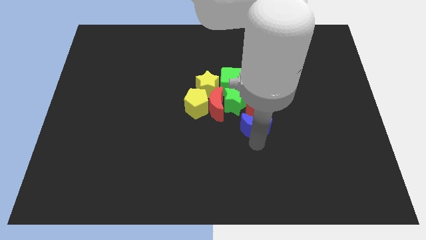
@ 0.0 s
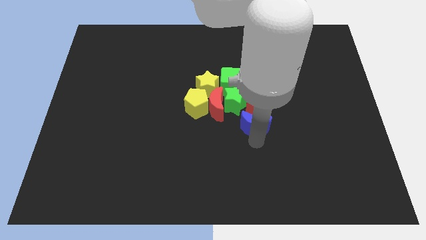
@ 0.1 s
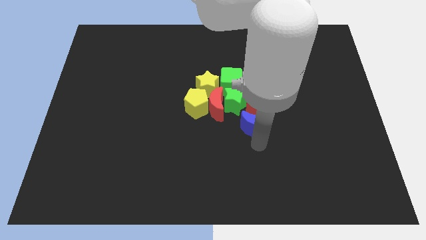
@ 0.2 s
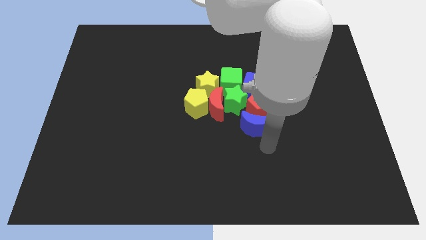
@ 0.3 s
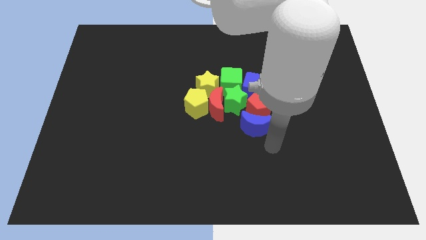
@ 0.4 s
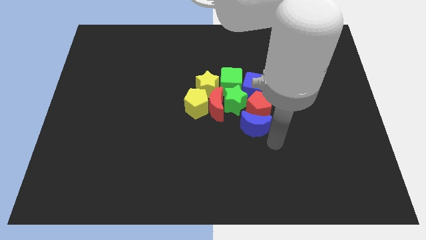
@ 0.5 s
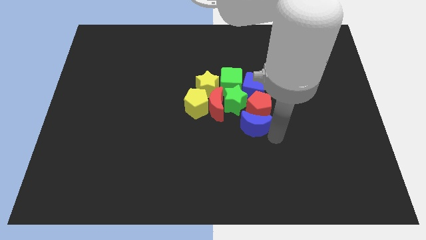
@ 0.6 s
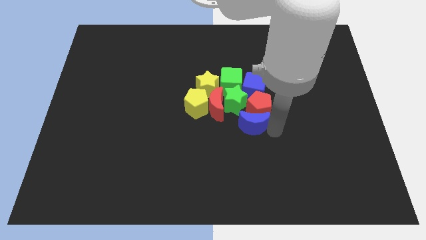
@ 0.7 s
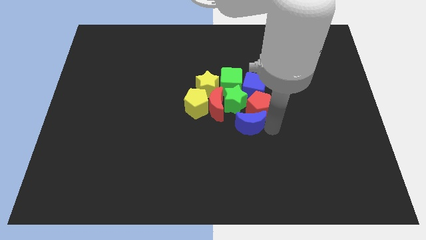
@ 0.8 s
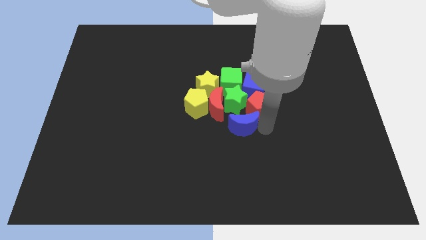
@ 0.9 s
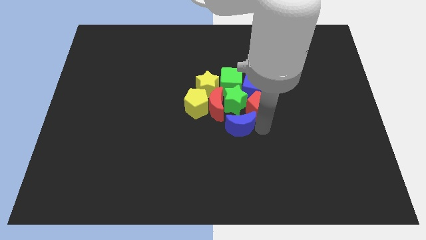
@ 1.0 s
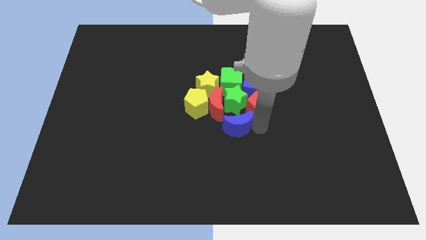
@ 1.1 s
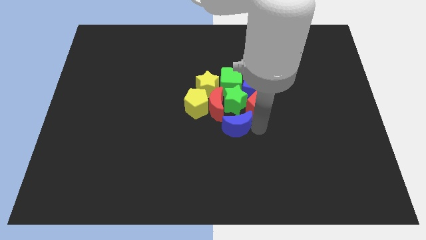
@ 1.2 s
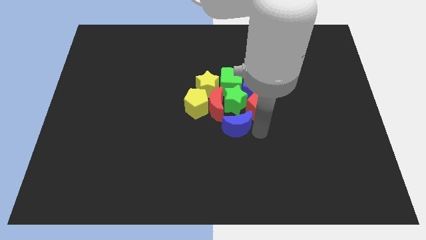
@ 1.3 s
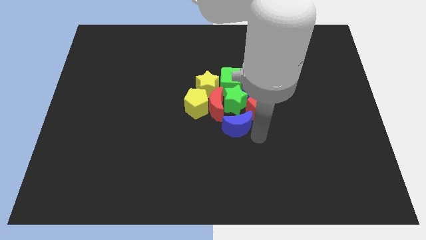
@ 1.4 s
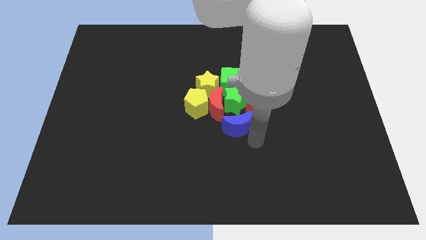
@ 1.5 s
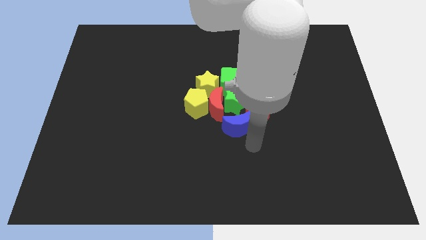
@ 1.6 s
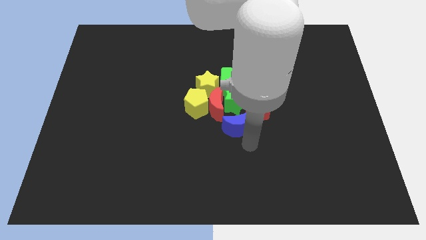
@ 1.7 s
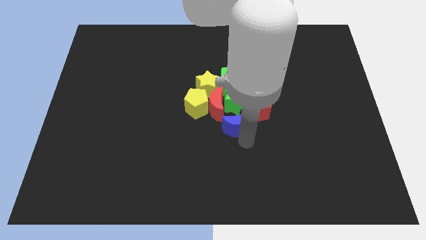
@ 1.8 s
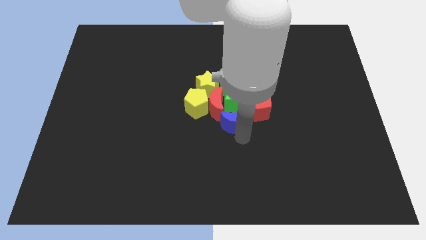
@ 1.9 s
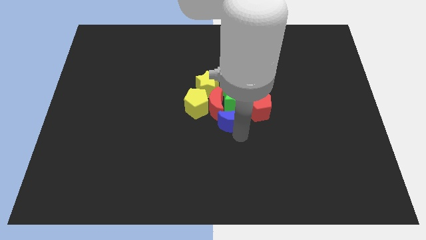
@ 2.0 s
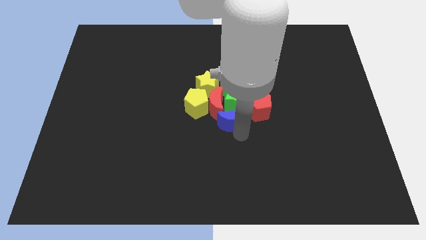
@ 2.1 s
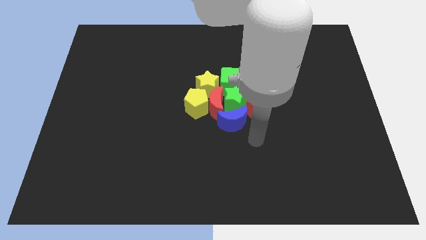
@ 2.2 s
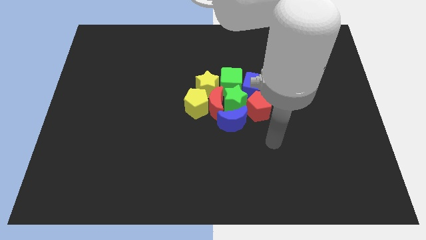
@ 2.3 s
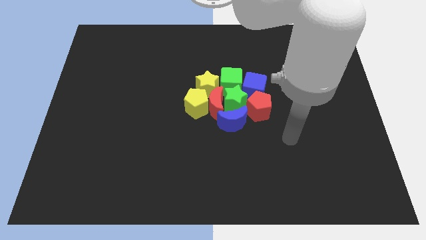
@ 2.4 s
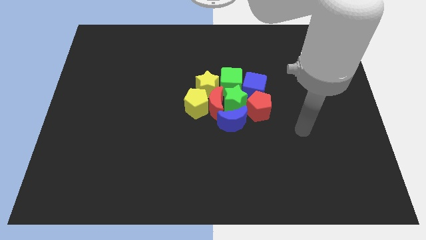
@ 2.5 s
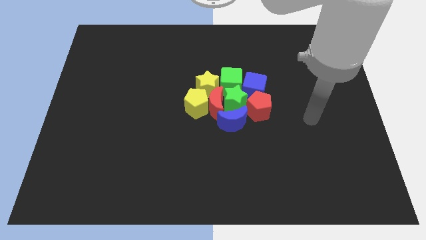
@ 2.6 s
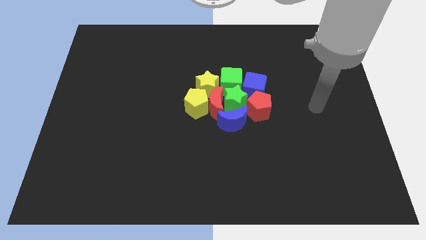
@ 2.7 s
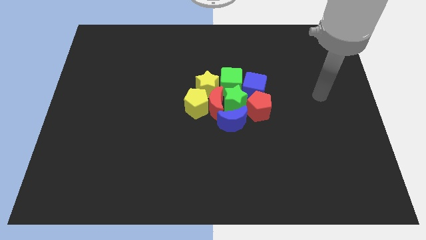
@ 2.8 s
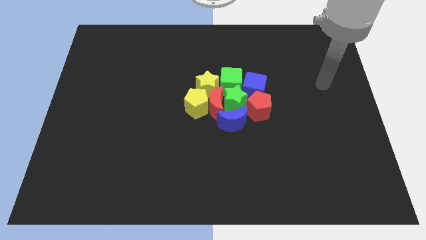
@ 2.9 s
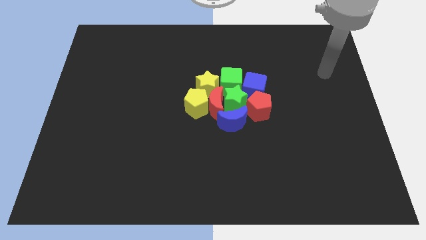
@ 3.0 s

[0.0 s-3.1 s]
make a group of all the blocks

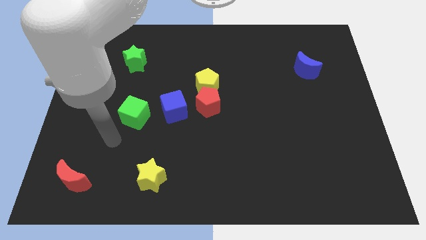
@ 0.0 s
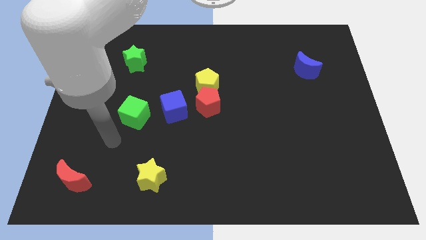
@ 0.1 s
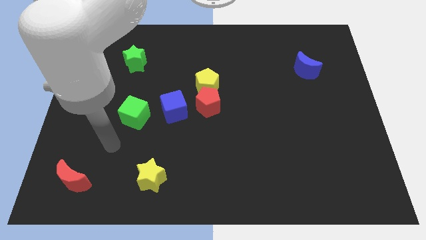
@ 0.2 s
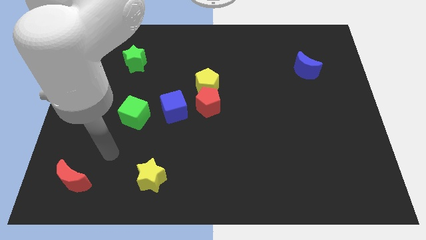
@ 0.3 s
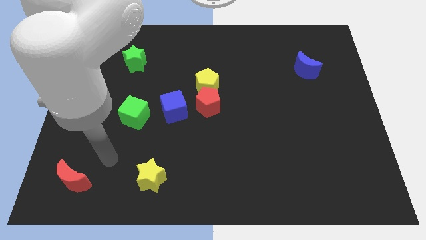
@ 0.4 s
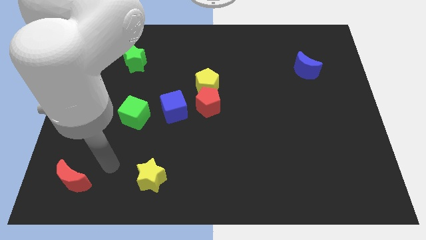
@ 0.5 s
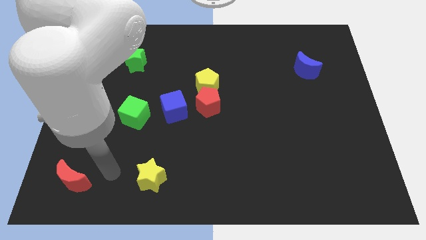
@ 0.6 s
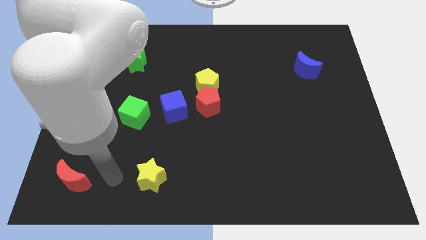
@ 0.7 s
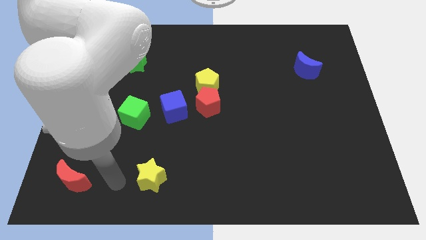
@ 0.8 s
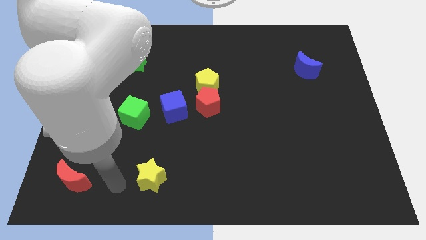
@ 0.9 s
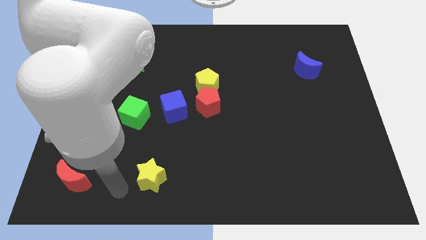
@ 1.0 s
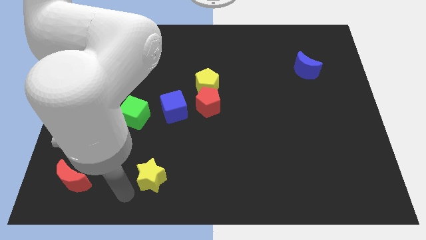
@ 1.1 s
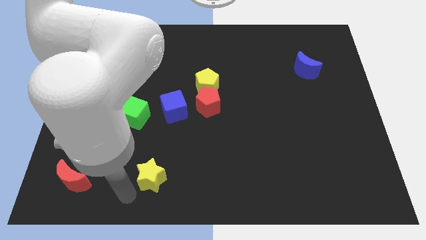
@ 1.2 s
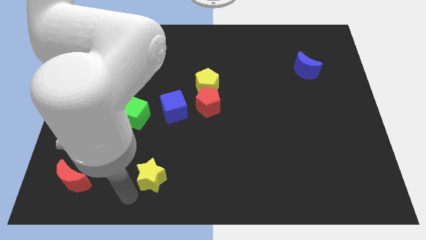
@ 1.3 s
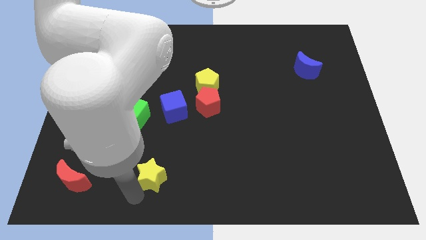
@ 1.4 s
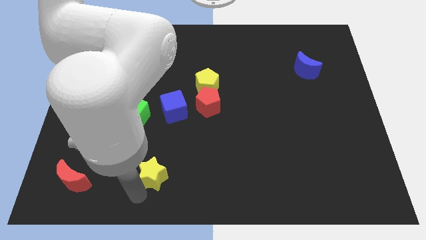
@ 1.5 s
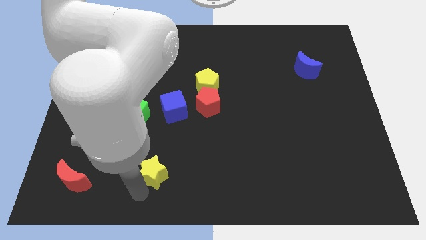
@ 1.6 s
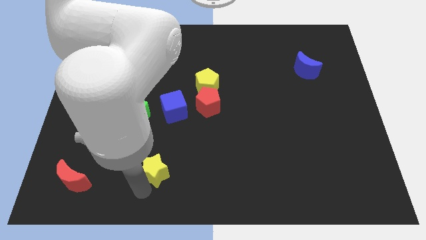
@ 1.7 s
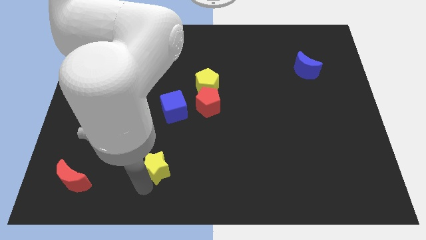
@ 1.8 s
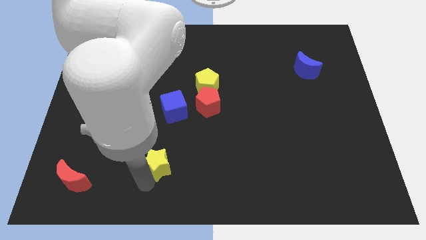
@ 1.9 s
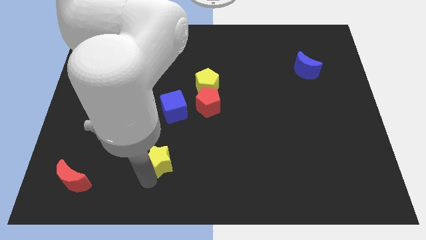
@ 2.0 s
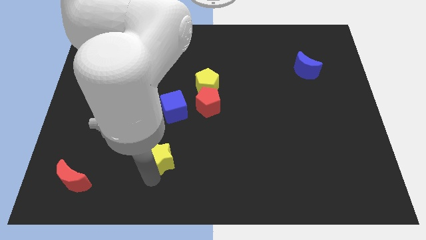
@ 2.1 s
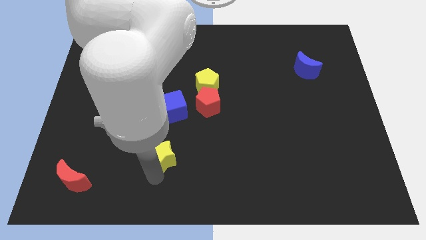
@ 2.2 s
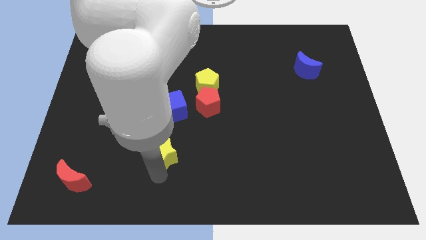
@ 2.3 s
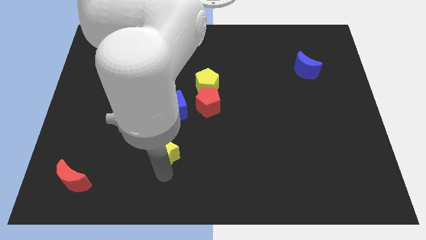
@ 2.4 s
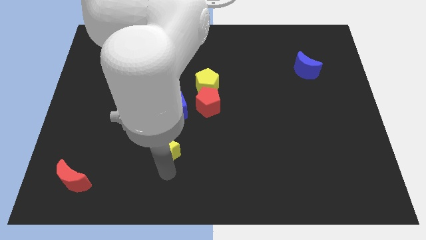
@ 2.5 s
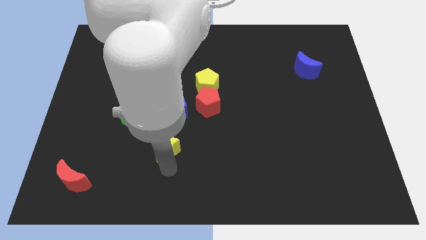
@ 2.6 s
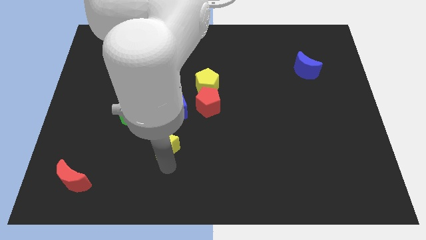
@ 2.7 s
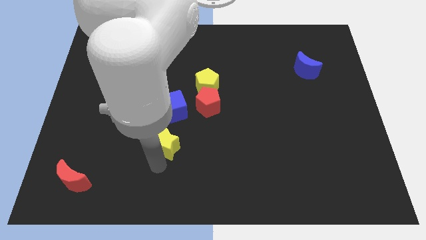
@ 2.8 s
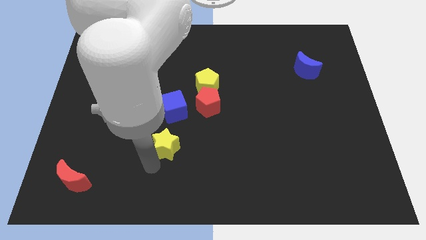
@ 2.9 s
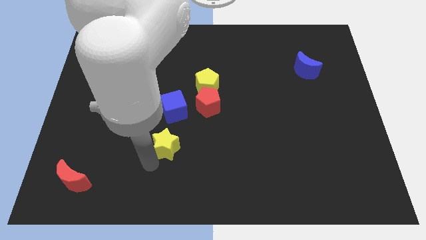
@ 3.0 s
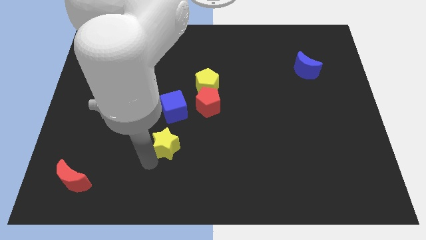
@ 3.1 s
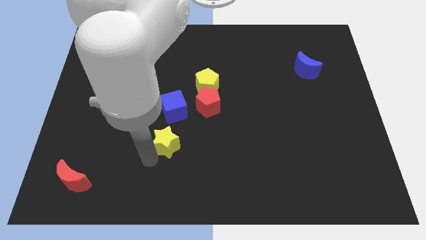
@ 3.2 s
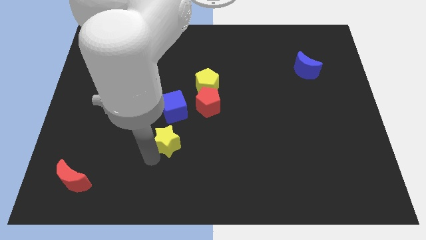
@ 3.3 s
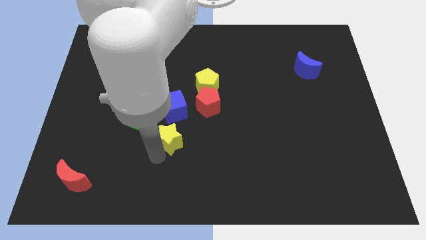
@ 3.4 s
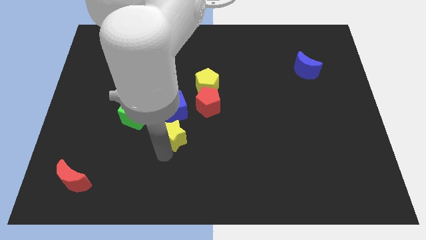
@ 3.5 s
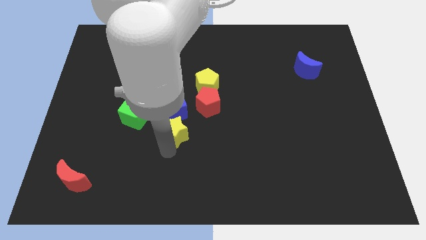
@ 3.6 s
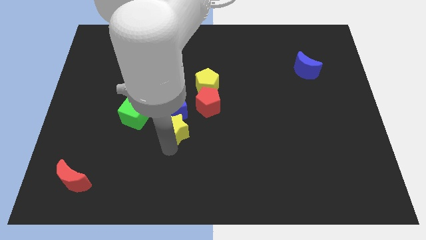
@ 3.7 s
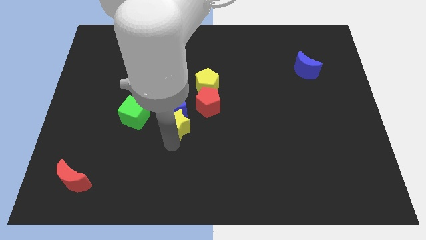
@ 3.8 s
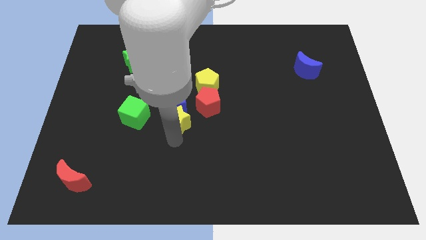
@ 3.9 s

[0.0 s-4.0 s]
move the yellow star to the bottom of the blue cube

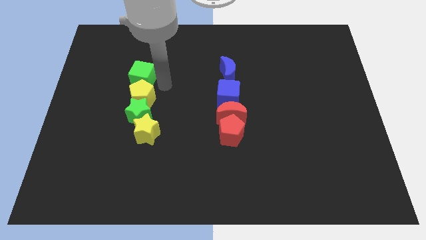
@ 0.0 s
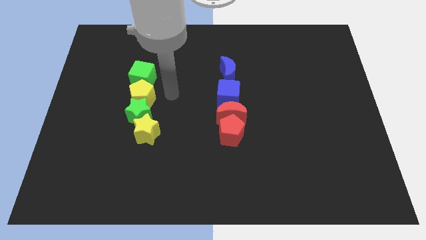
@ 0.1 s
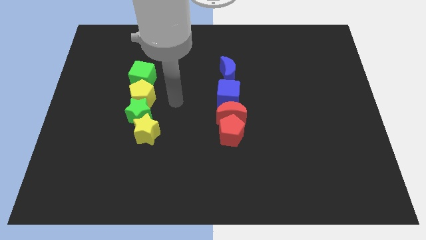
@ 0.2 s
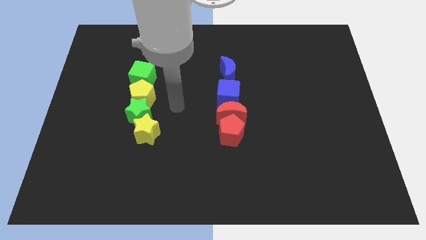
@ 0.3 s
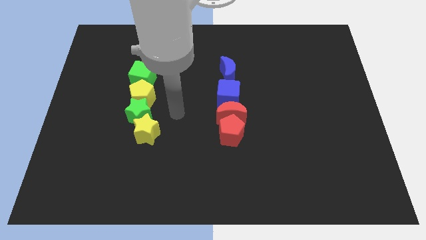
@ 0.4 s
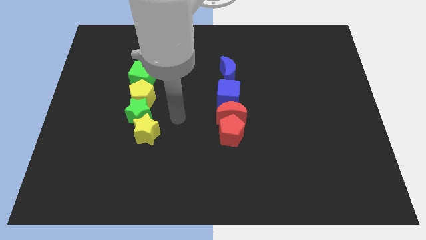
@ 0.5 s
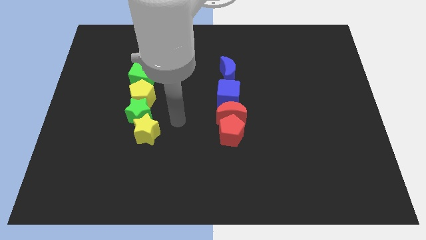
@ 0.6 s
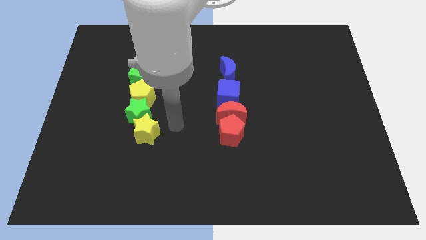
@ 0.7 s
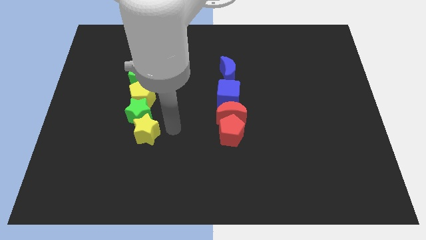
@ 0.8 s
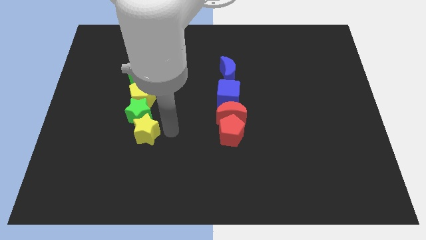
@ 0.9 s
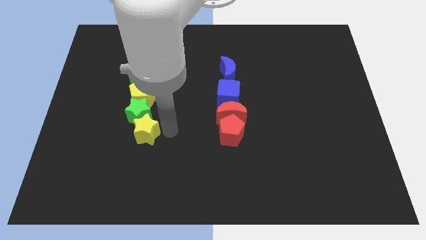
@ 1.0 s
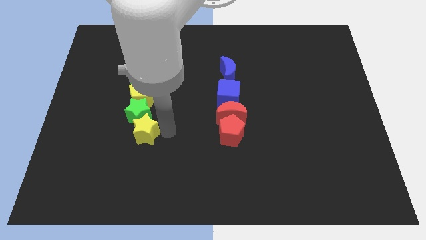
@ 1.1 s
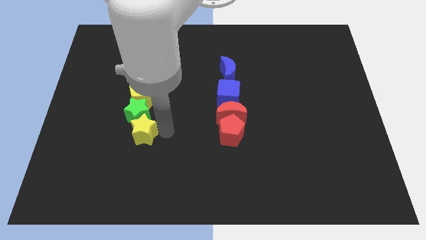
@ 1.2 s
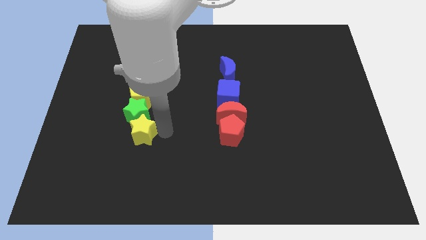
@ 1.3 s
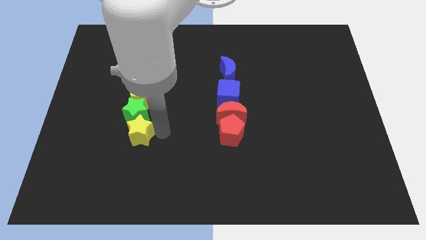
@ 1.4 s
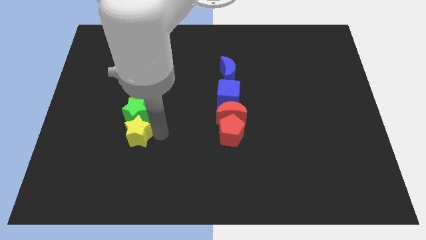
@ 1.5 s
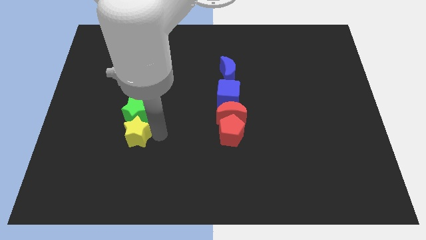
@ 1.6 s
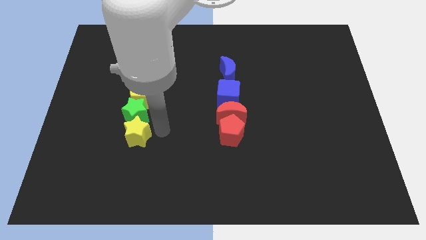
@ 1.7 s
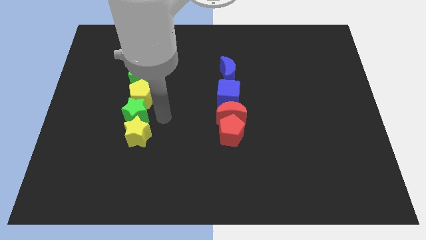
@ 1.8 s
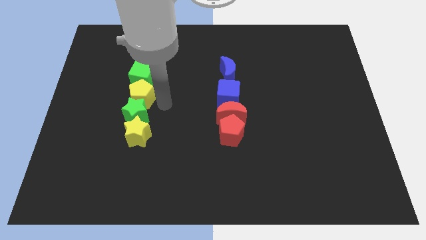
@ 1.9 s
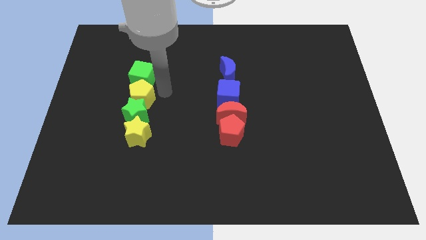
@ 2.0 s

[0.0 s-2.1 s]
move the yellow star slightly towards left
